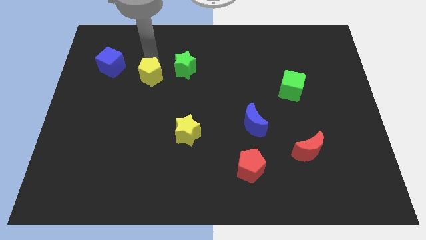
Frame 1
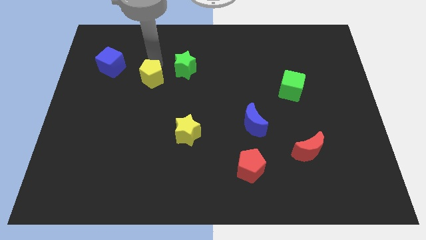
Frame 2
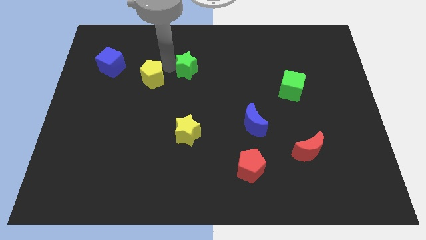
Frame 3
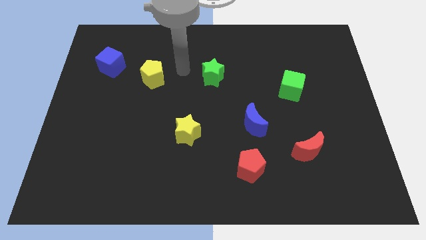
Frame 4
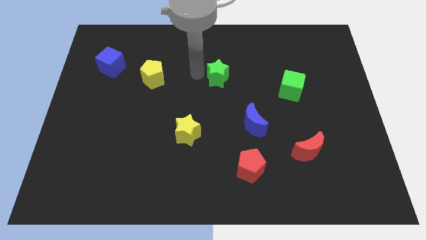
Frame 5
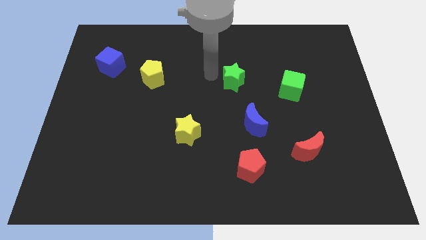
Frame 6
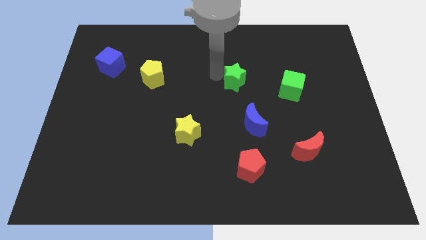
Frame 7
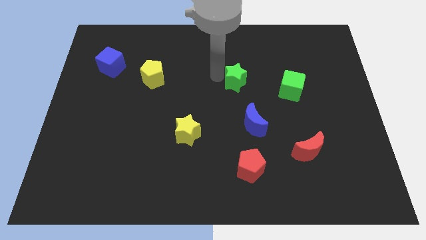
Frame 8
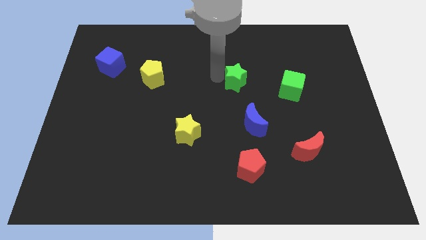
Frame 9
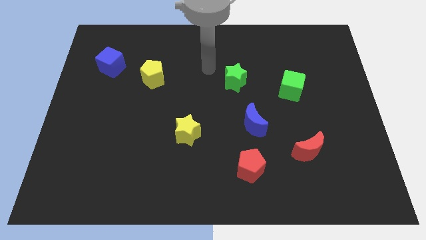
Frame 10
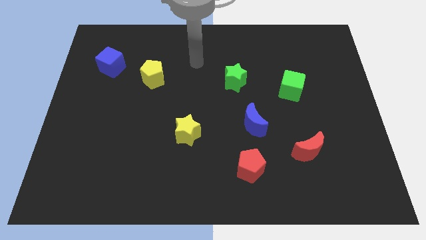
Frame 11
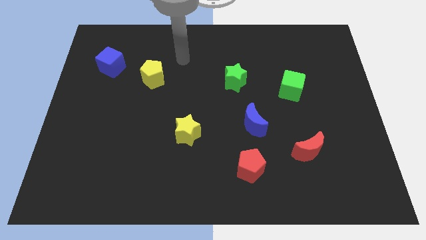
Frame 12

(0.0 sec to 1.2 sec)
move the green star diagonal to the left of the green cube

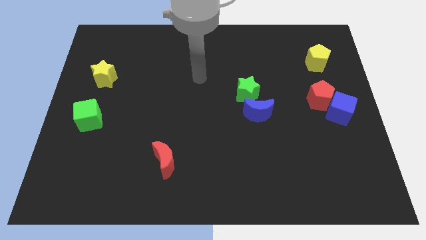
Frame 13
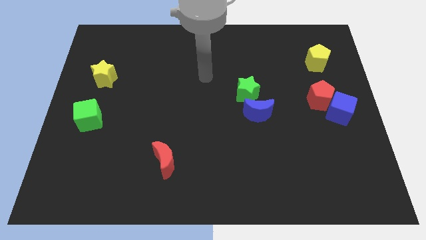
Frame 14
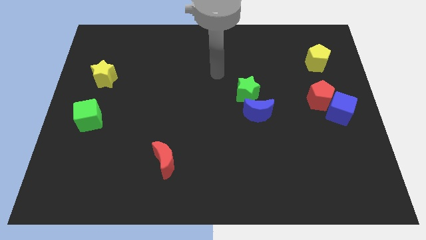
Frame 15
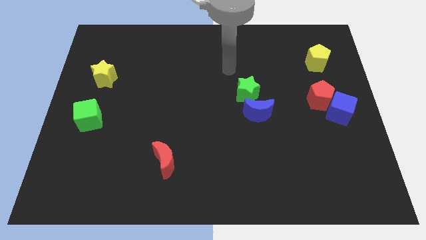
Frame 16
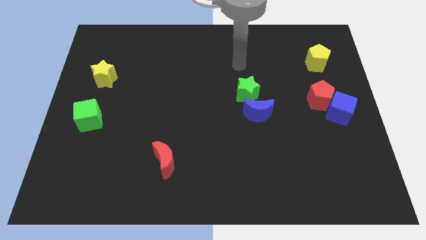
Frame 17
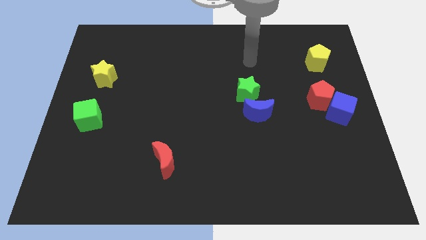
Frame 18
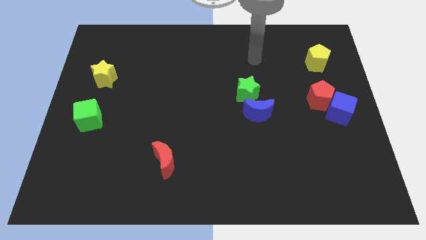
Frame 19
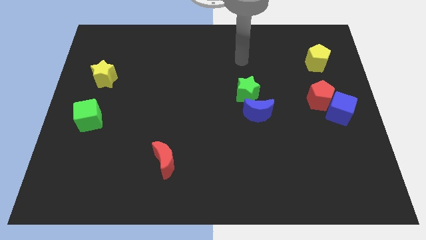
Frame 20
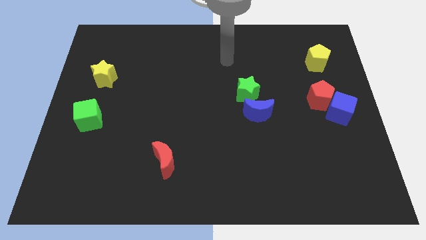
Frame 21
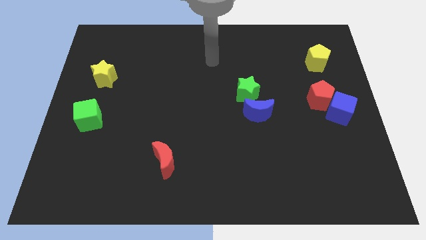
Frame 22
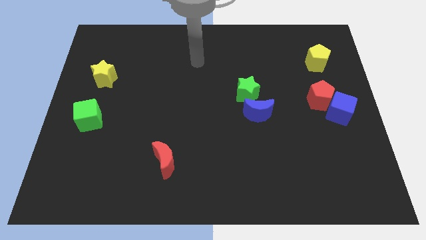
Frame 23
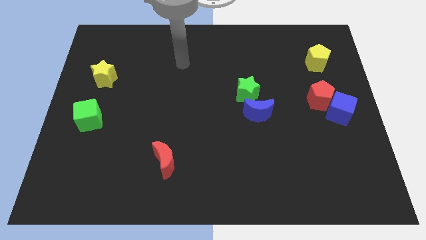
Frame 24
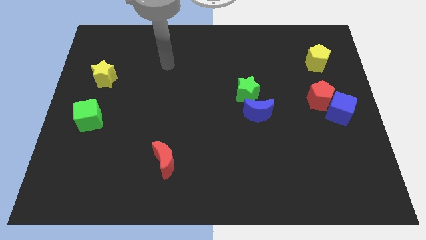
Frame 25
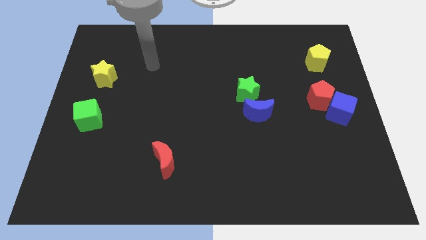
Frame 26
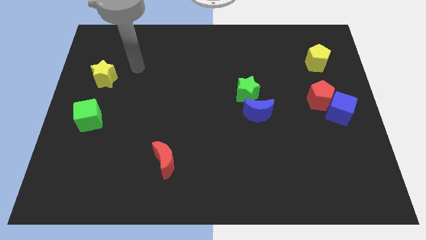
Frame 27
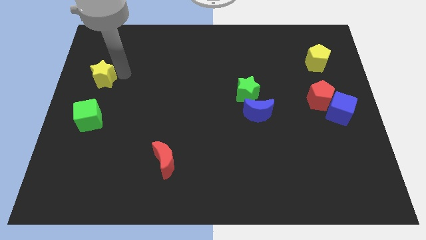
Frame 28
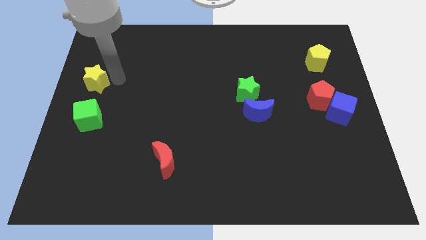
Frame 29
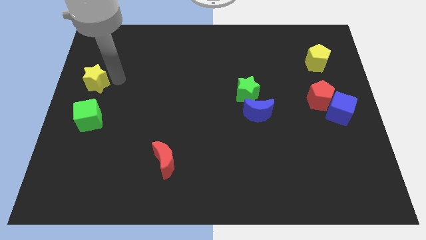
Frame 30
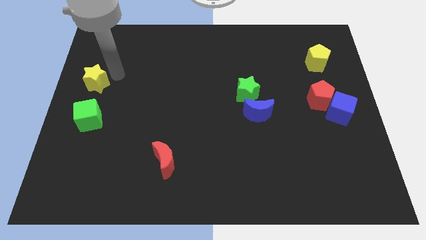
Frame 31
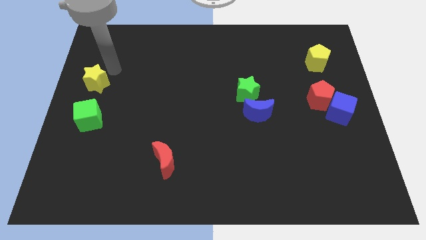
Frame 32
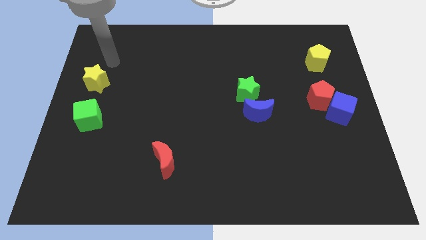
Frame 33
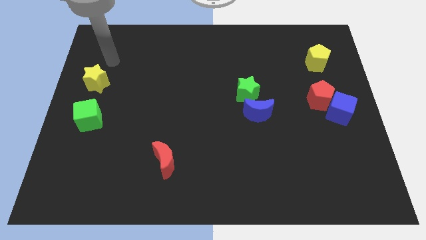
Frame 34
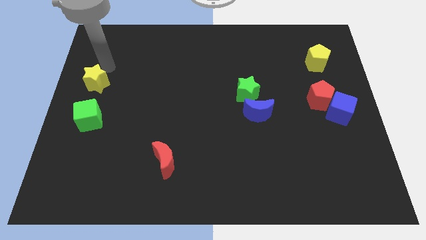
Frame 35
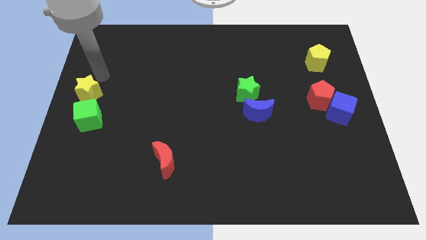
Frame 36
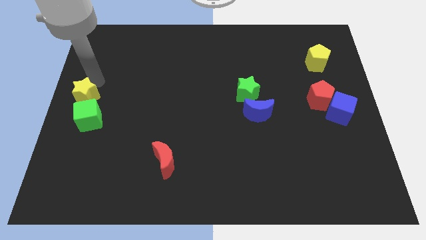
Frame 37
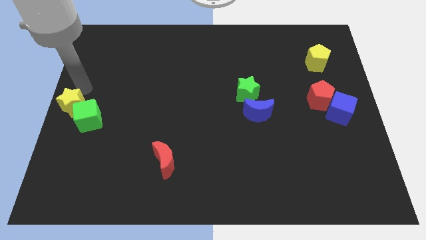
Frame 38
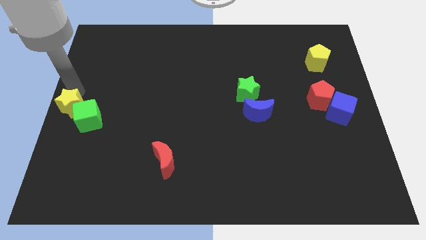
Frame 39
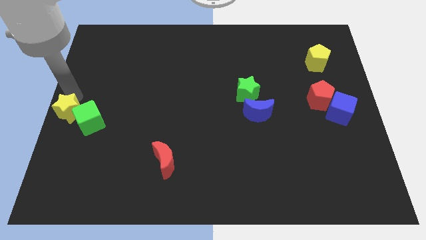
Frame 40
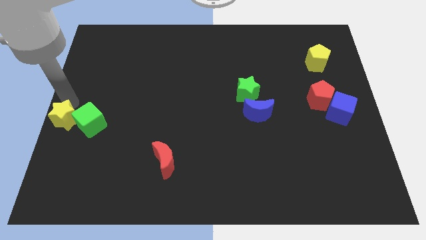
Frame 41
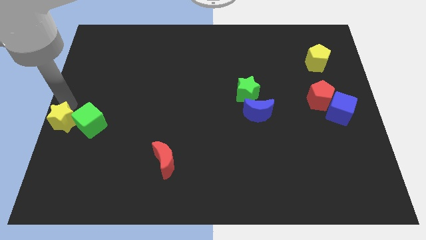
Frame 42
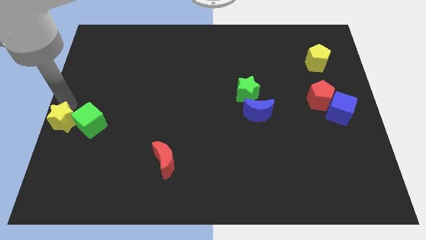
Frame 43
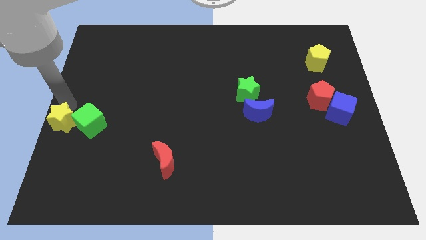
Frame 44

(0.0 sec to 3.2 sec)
slide the yellow star near to the green cube

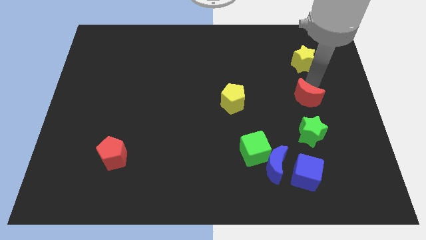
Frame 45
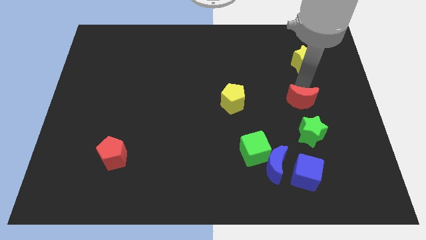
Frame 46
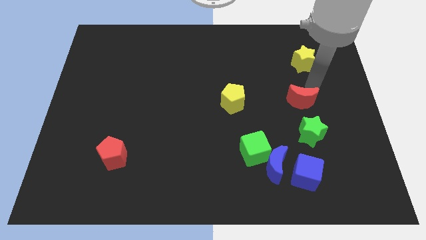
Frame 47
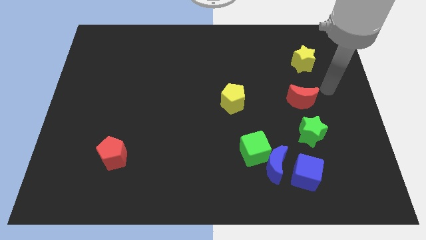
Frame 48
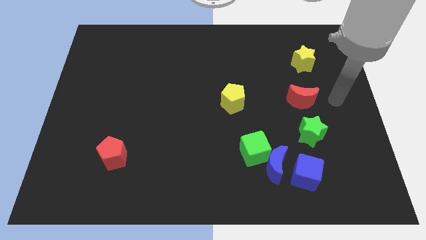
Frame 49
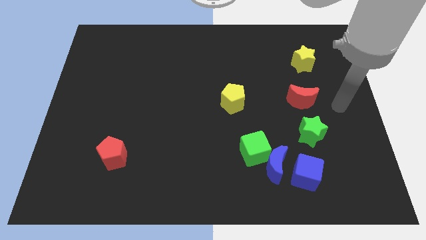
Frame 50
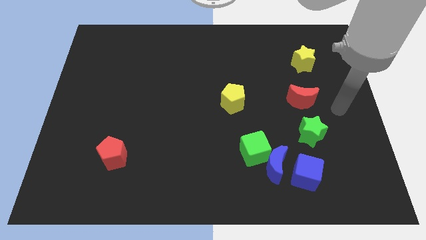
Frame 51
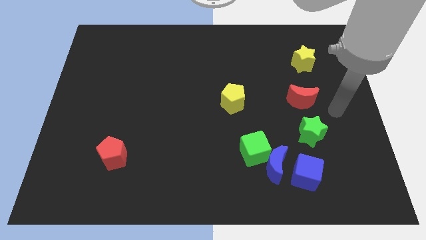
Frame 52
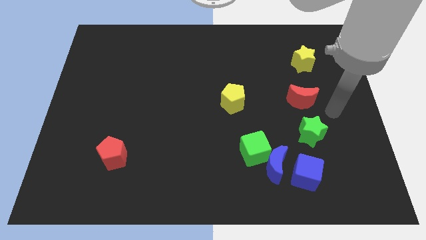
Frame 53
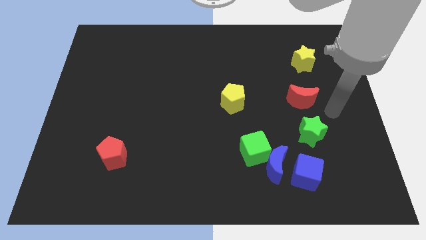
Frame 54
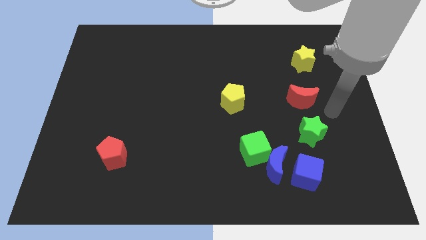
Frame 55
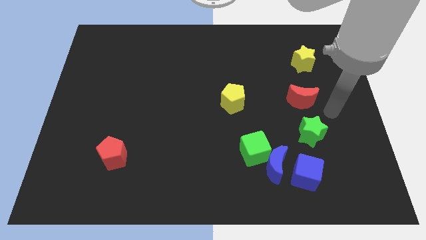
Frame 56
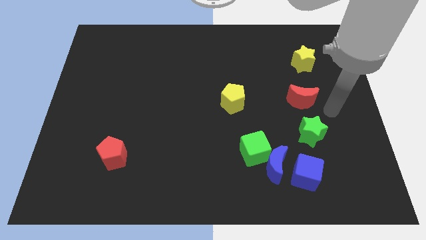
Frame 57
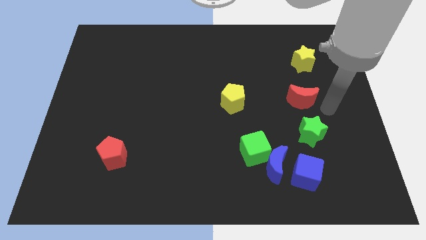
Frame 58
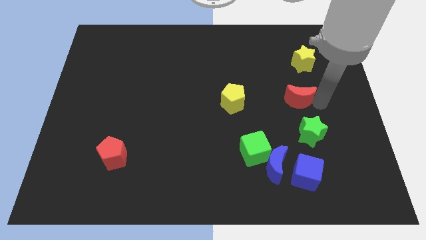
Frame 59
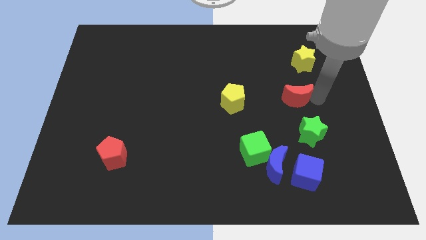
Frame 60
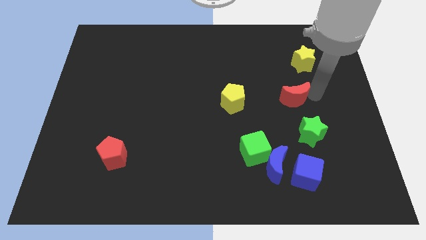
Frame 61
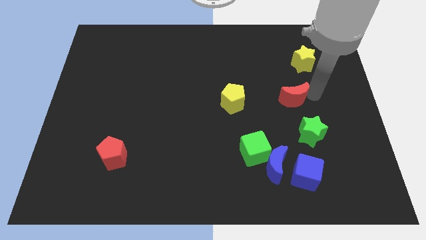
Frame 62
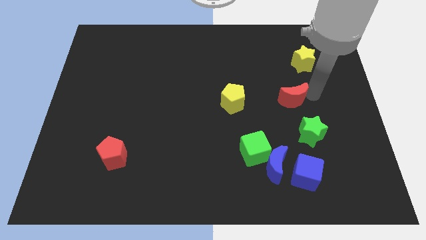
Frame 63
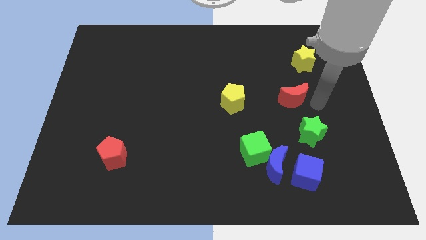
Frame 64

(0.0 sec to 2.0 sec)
place the red moon diagonally bottom left to the yellow star

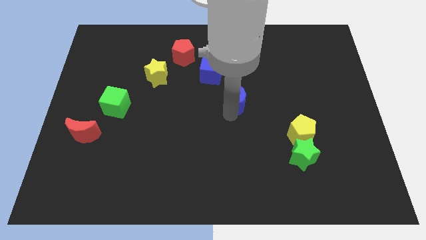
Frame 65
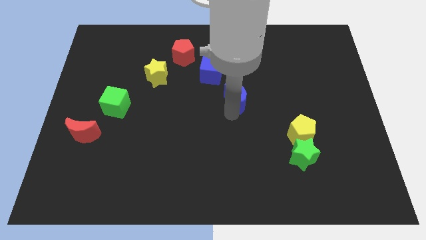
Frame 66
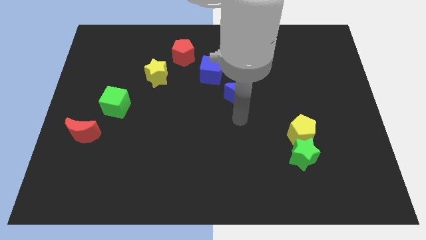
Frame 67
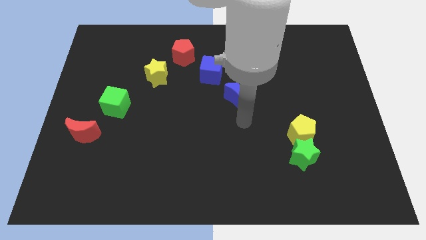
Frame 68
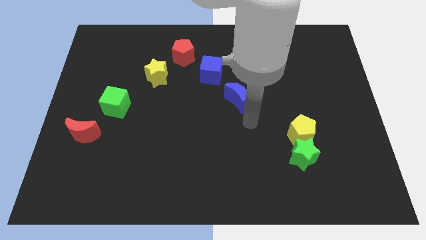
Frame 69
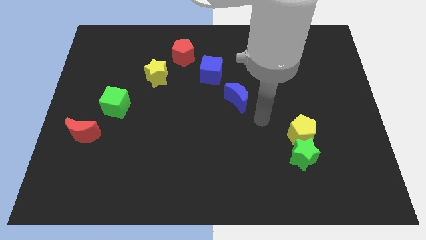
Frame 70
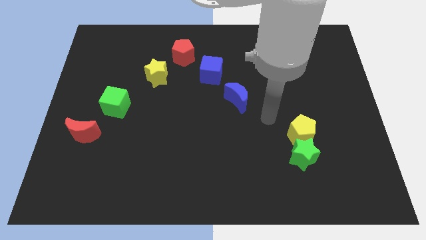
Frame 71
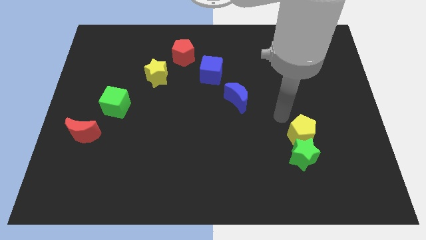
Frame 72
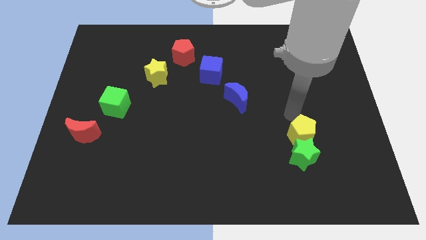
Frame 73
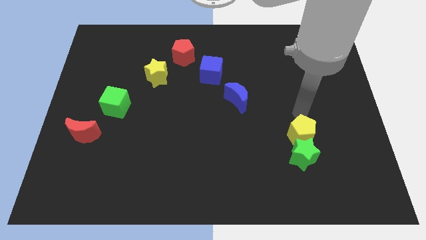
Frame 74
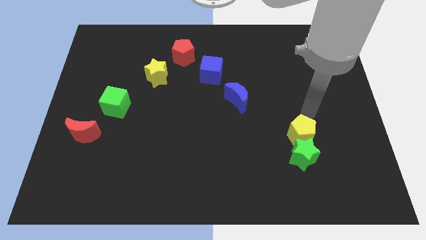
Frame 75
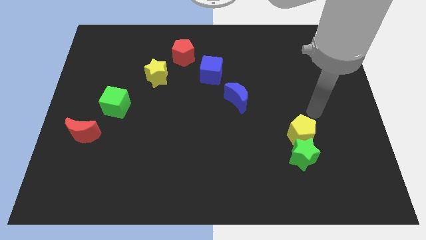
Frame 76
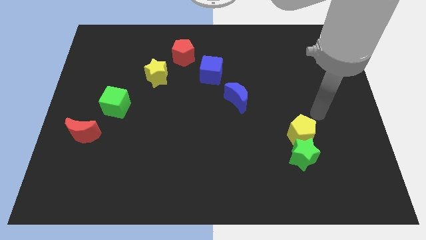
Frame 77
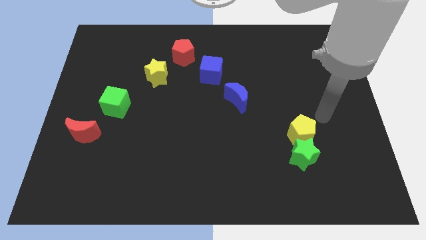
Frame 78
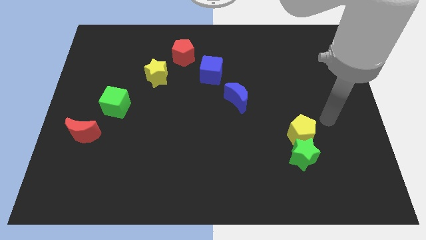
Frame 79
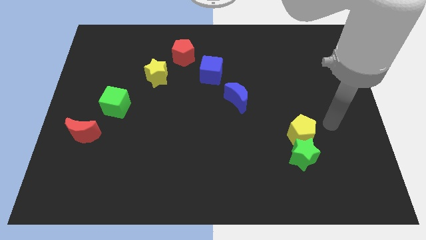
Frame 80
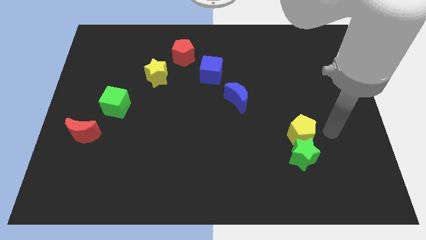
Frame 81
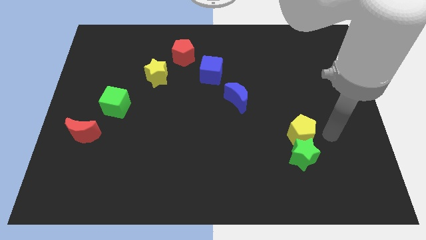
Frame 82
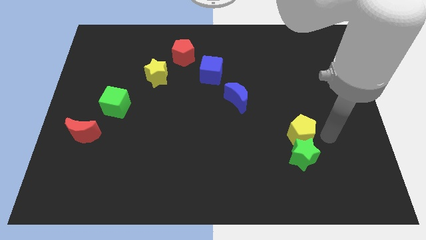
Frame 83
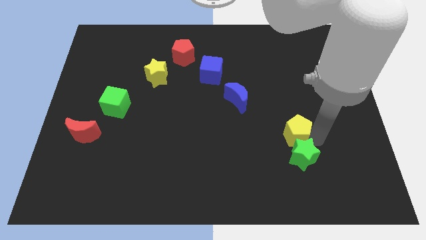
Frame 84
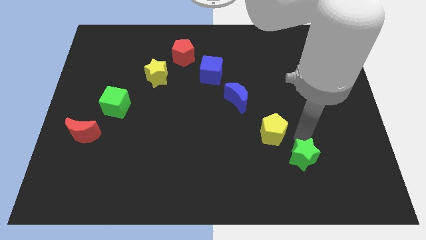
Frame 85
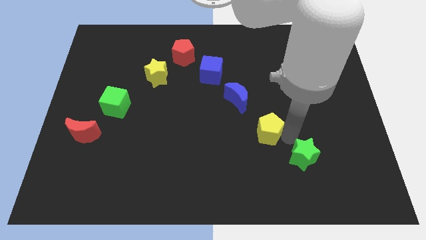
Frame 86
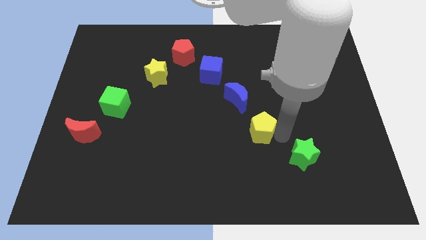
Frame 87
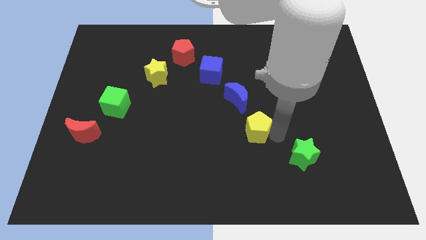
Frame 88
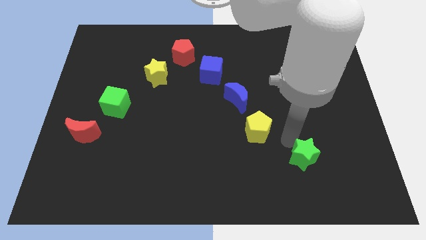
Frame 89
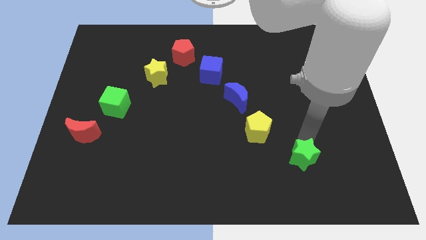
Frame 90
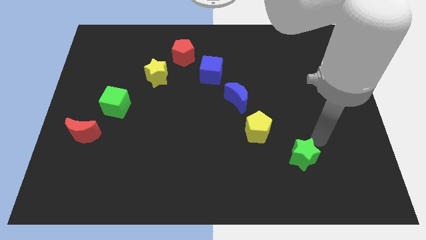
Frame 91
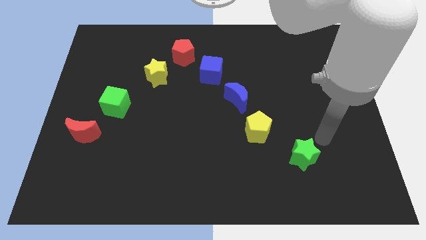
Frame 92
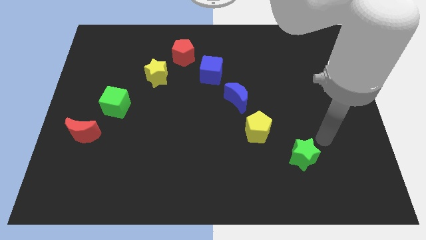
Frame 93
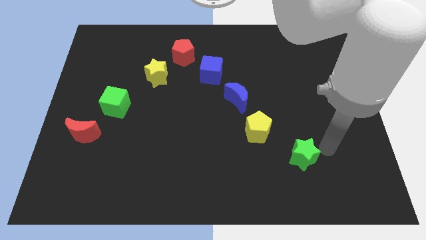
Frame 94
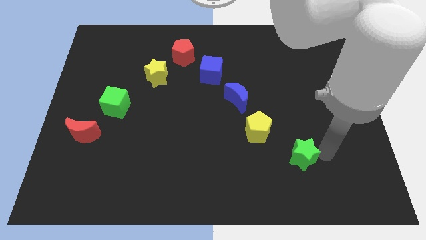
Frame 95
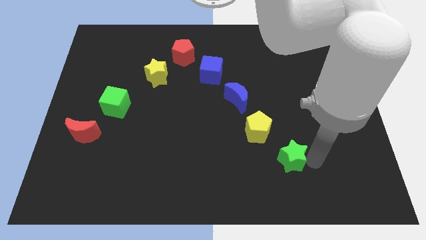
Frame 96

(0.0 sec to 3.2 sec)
place the yellow pentagon beside the blue moon to form a line
